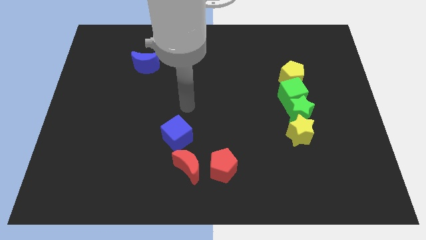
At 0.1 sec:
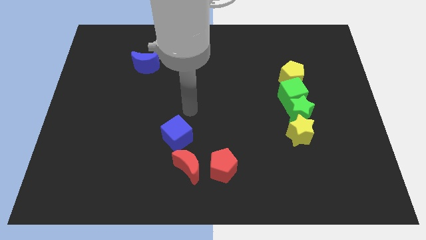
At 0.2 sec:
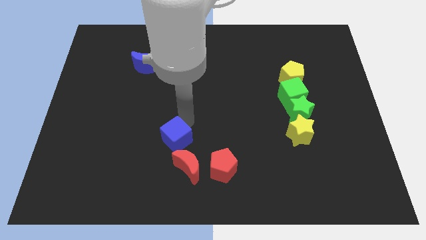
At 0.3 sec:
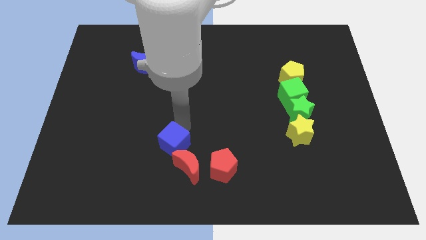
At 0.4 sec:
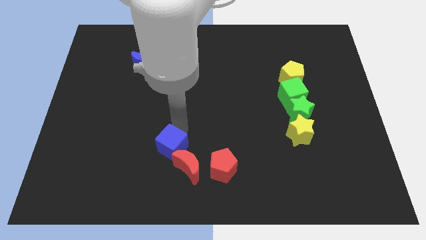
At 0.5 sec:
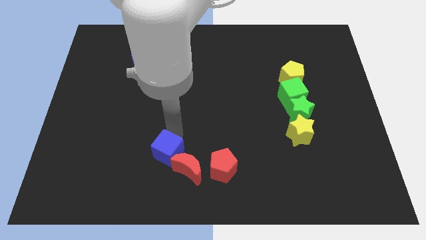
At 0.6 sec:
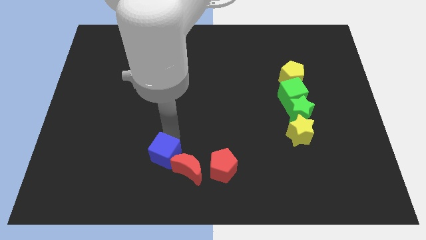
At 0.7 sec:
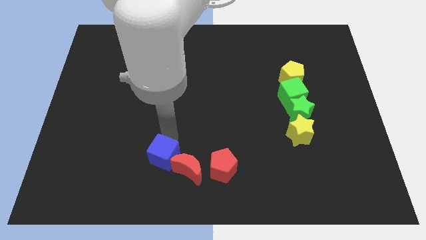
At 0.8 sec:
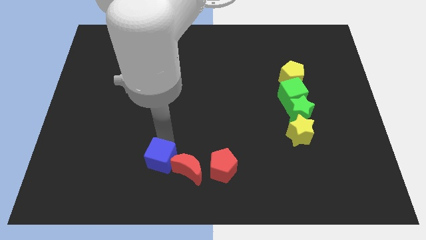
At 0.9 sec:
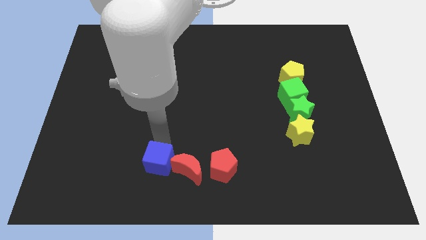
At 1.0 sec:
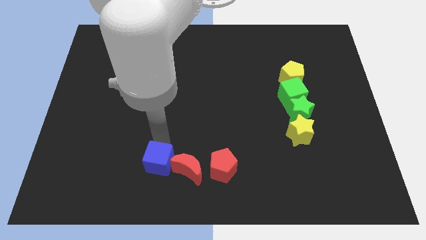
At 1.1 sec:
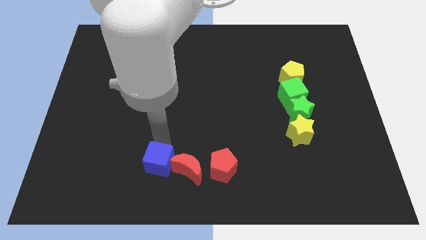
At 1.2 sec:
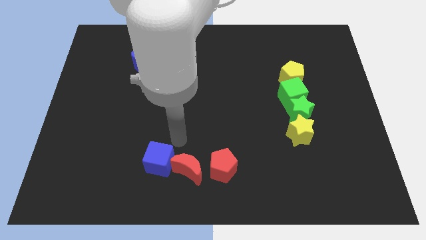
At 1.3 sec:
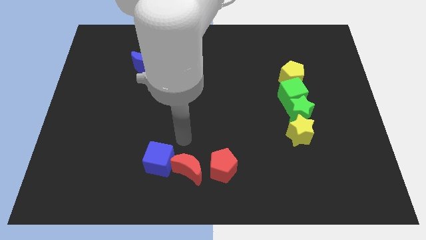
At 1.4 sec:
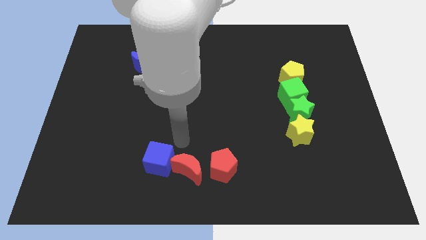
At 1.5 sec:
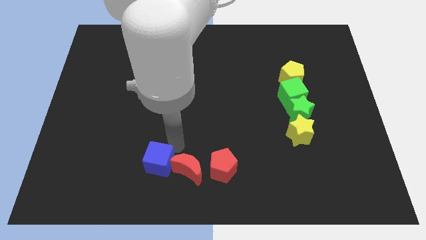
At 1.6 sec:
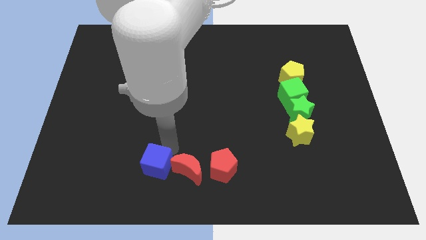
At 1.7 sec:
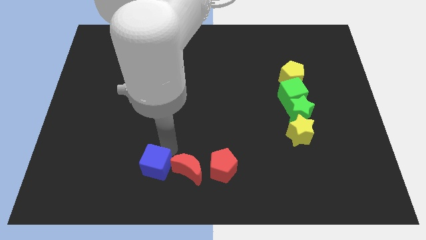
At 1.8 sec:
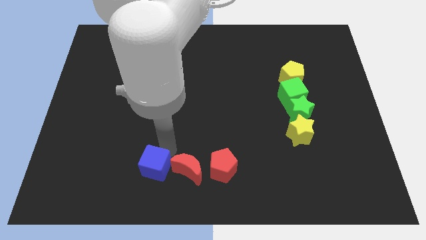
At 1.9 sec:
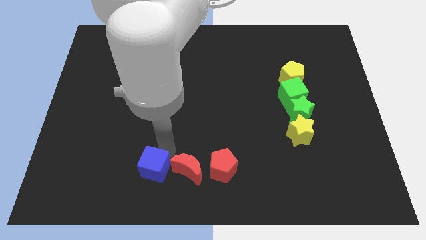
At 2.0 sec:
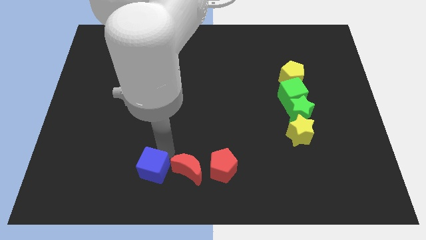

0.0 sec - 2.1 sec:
move the blue cube to the left side of the red crescent

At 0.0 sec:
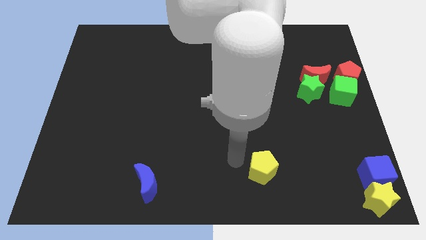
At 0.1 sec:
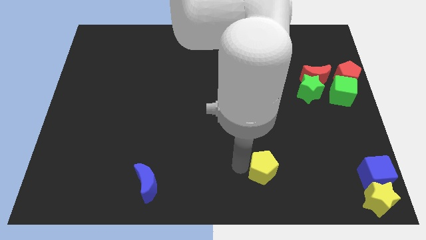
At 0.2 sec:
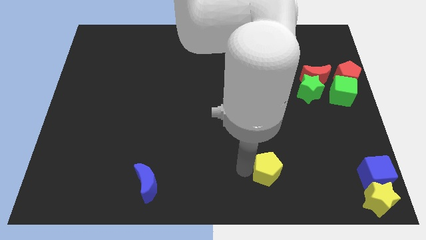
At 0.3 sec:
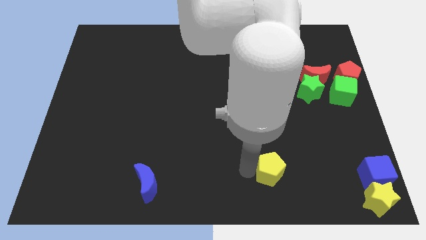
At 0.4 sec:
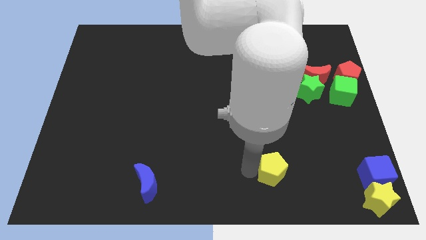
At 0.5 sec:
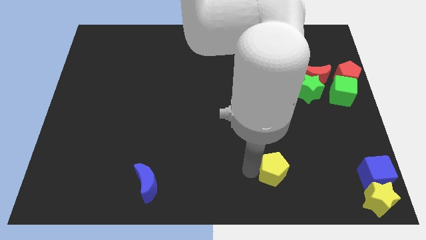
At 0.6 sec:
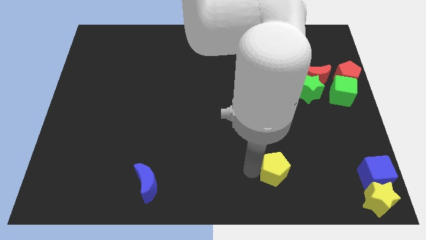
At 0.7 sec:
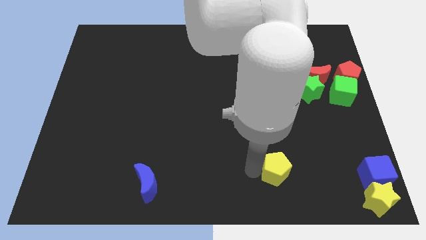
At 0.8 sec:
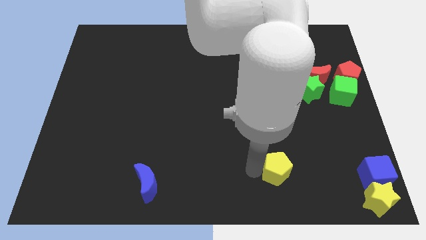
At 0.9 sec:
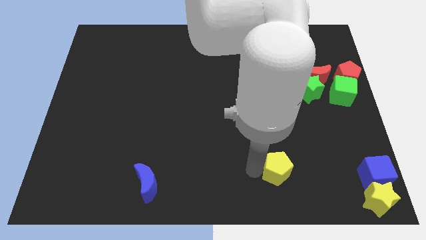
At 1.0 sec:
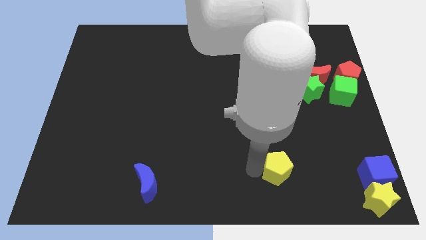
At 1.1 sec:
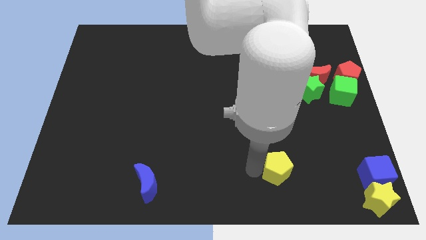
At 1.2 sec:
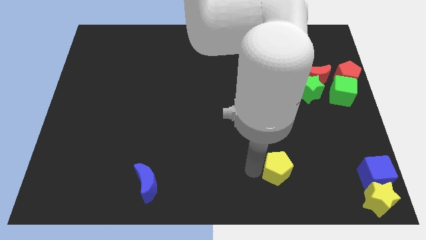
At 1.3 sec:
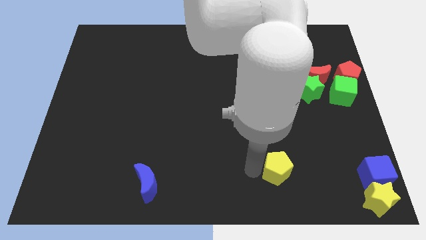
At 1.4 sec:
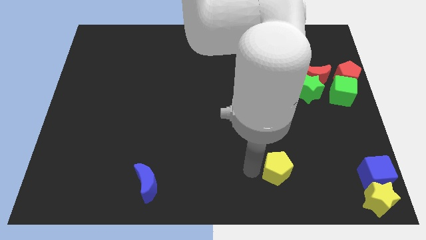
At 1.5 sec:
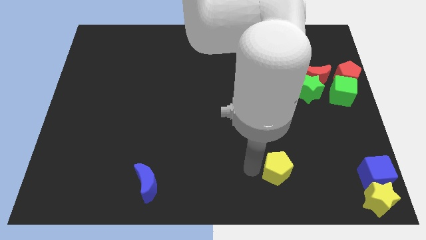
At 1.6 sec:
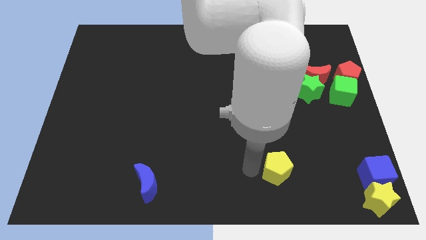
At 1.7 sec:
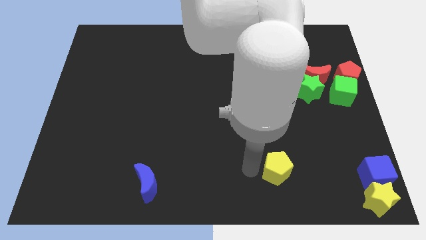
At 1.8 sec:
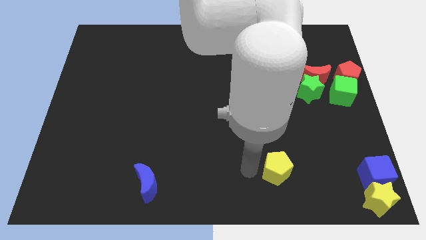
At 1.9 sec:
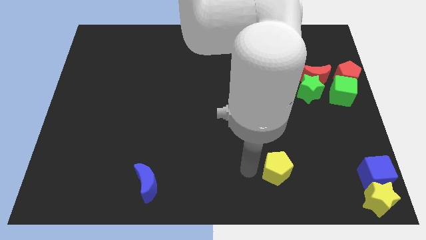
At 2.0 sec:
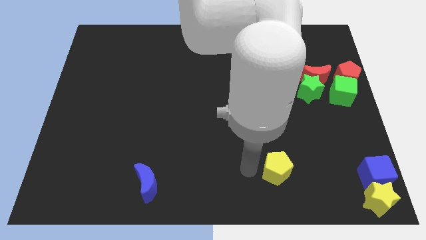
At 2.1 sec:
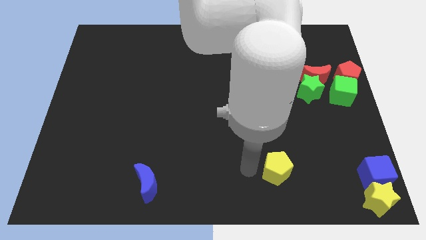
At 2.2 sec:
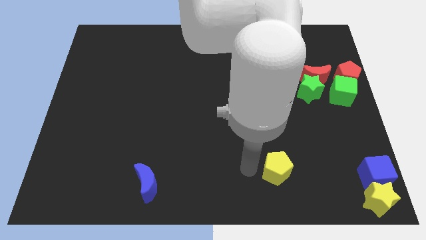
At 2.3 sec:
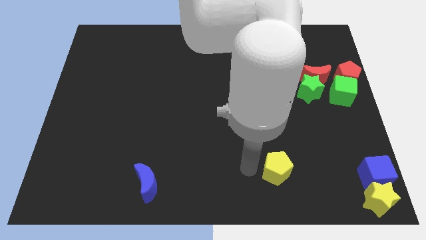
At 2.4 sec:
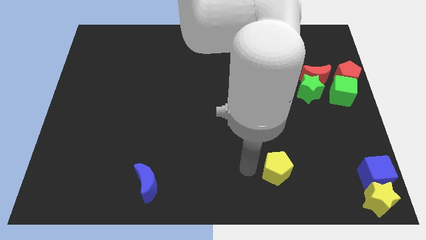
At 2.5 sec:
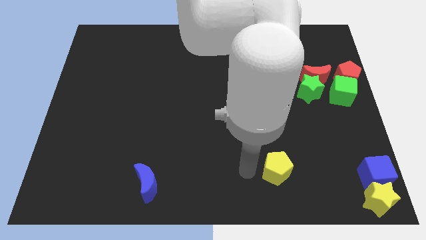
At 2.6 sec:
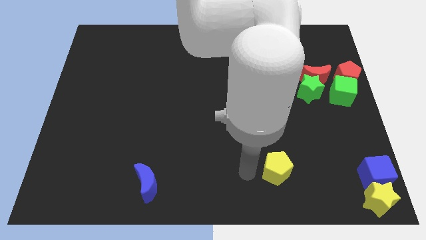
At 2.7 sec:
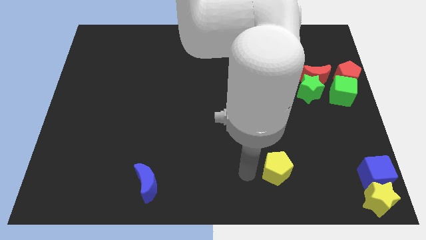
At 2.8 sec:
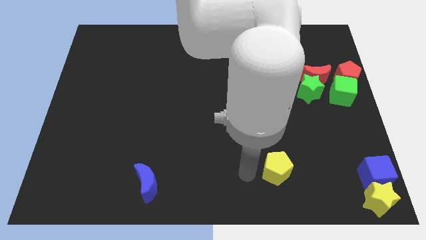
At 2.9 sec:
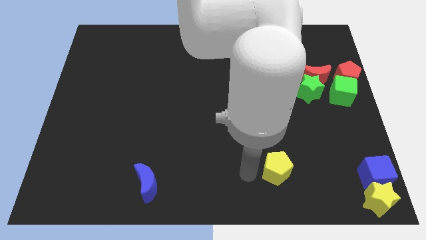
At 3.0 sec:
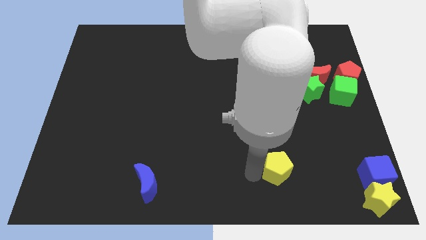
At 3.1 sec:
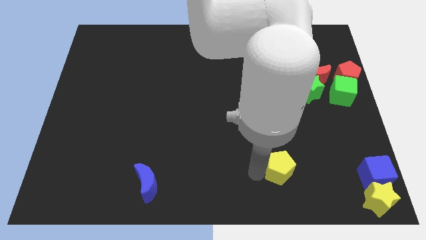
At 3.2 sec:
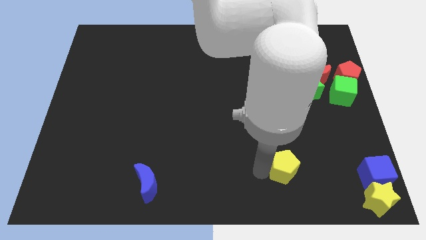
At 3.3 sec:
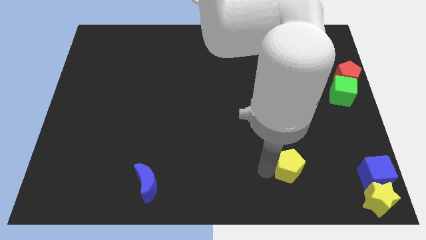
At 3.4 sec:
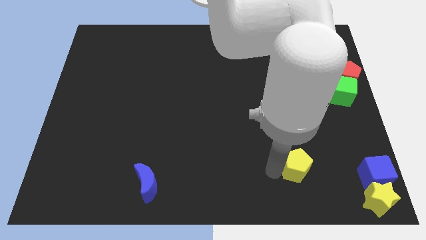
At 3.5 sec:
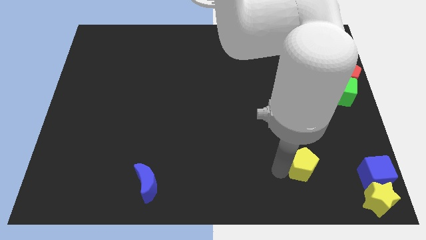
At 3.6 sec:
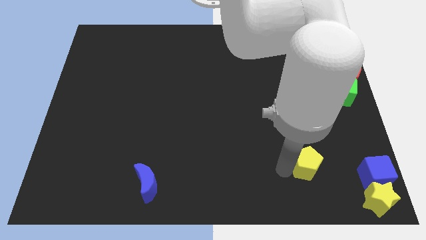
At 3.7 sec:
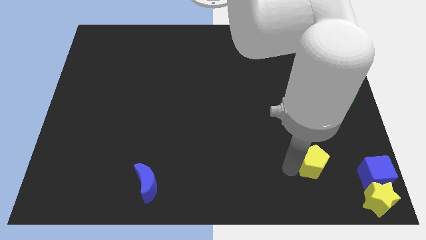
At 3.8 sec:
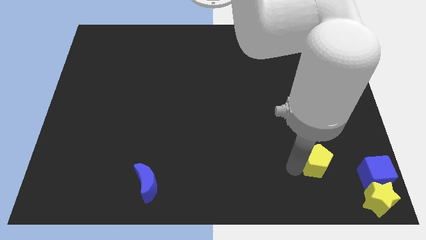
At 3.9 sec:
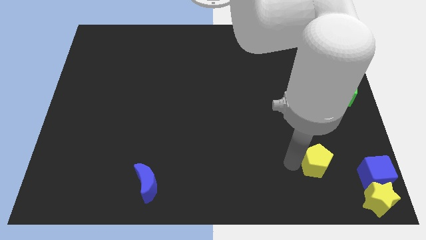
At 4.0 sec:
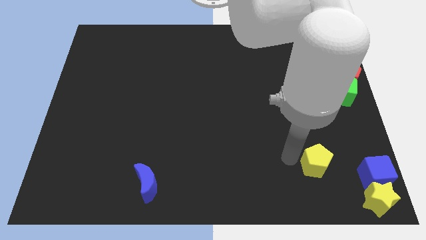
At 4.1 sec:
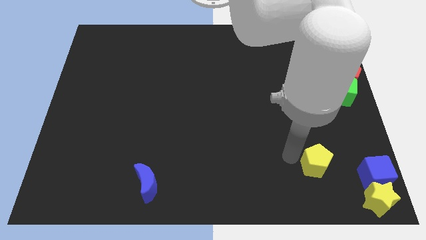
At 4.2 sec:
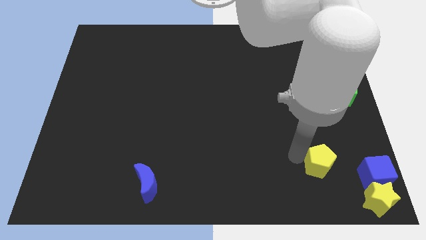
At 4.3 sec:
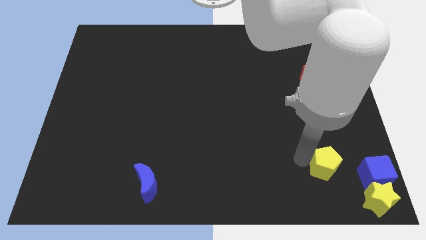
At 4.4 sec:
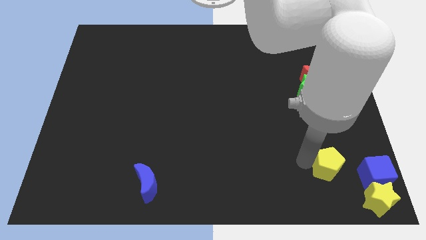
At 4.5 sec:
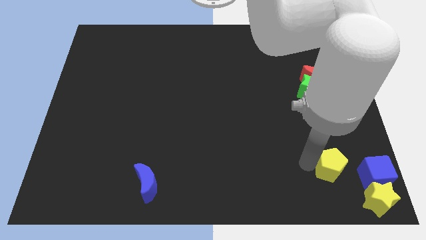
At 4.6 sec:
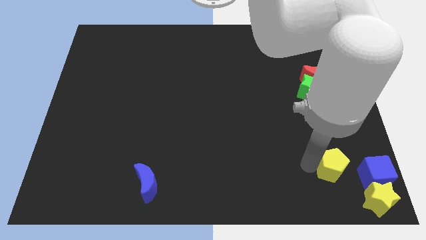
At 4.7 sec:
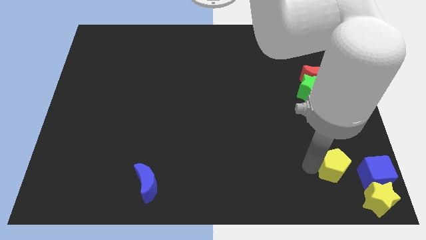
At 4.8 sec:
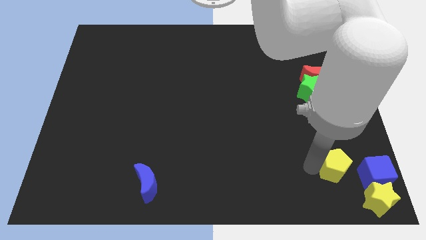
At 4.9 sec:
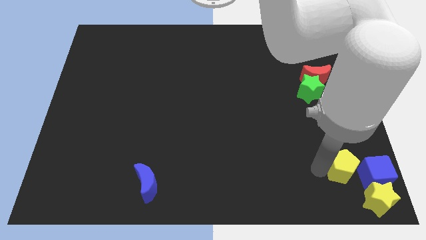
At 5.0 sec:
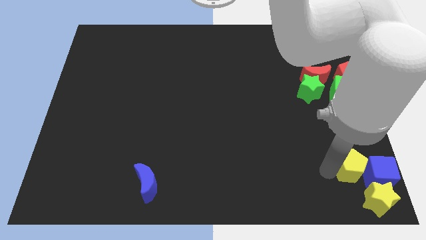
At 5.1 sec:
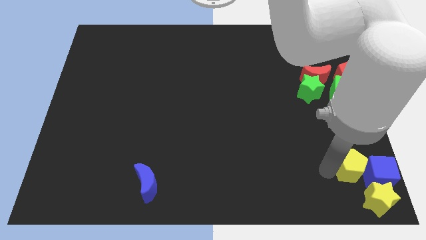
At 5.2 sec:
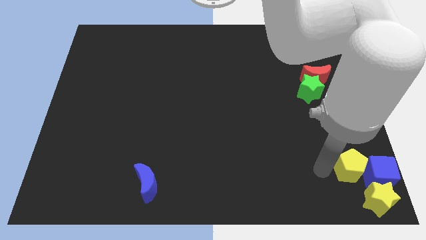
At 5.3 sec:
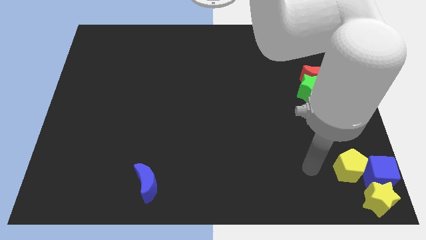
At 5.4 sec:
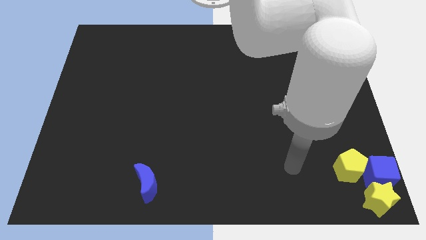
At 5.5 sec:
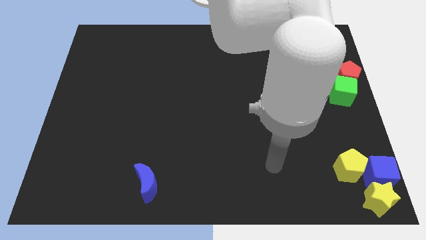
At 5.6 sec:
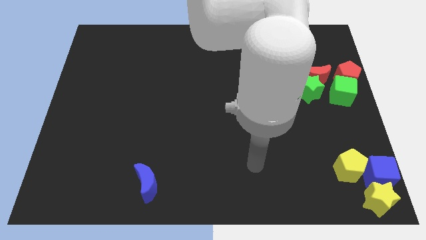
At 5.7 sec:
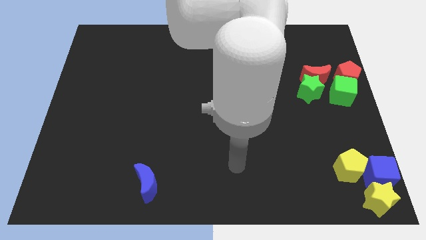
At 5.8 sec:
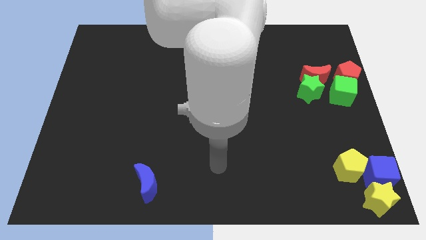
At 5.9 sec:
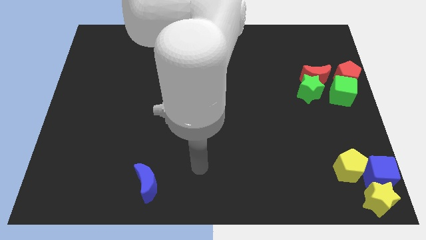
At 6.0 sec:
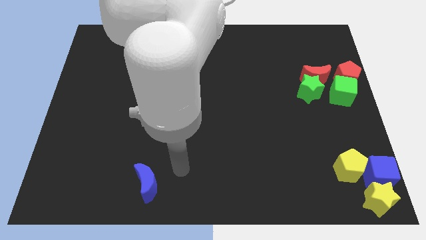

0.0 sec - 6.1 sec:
place the yellow pentagon to the left of the blue cube

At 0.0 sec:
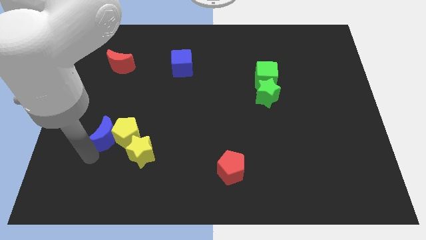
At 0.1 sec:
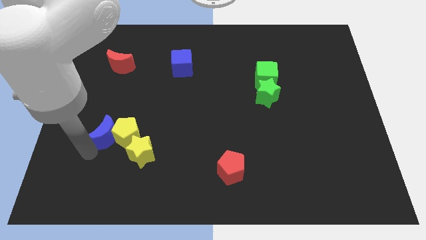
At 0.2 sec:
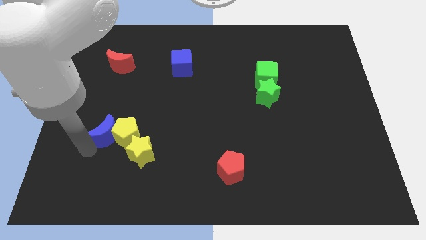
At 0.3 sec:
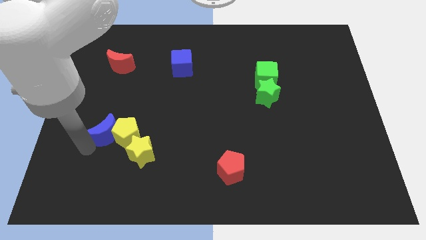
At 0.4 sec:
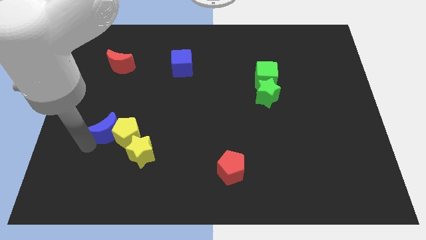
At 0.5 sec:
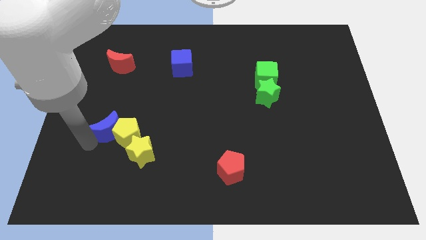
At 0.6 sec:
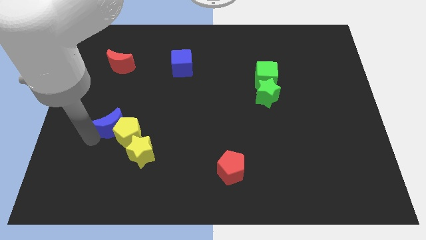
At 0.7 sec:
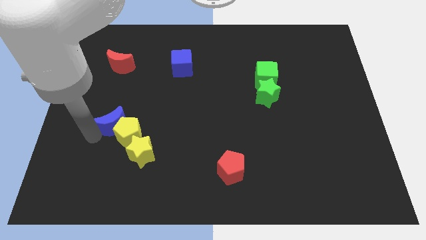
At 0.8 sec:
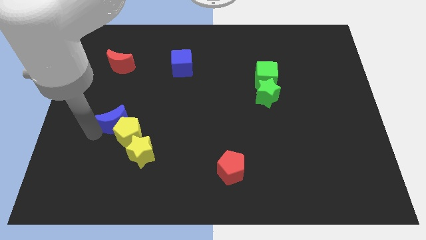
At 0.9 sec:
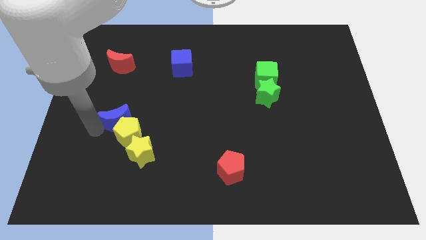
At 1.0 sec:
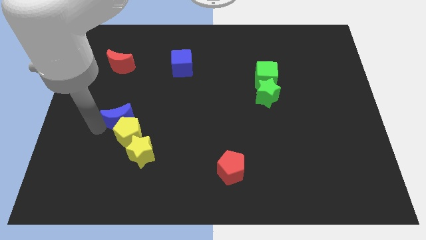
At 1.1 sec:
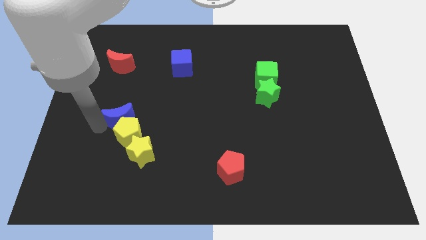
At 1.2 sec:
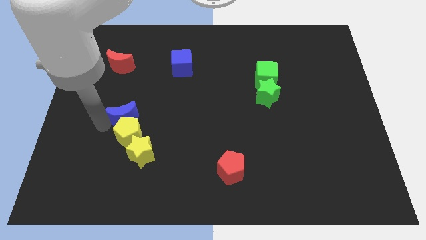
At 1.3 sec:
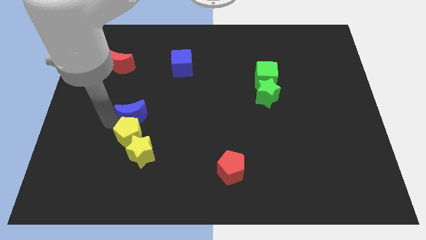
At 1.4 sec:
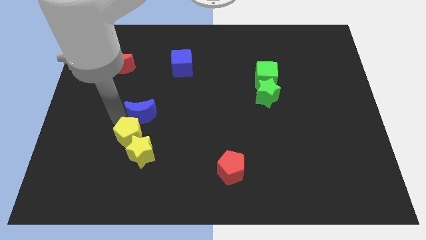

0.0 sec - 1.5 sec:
place blue moon above yellow pentagon
